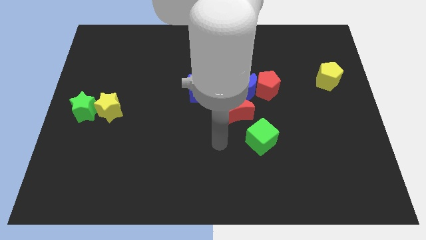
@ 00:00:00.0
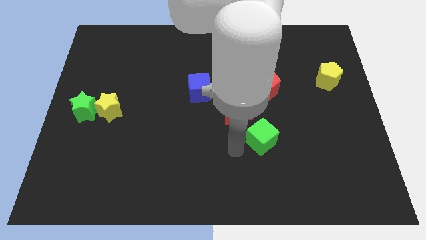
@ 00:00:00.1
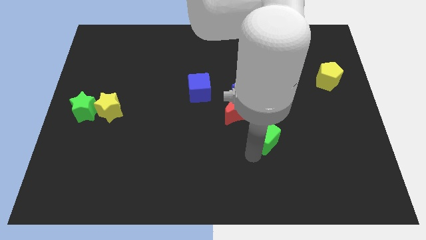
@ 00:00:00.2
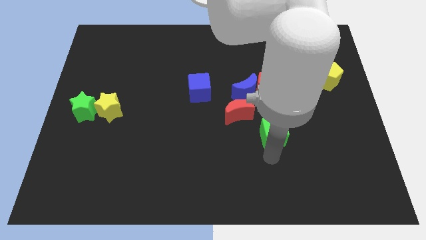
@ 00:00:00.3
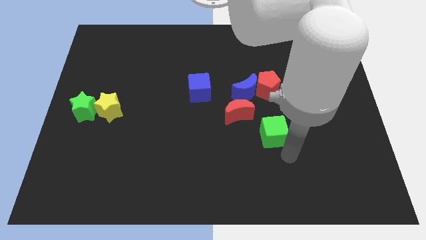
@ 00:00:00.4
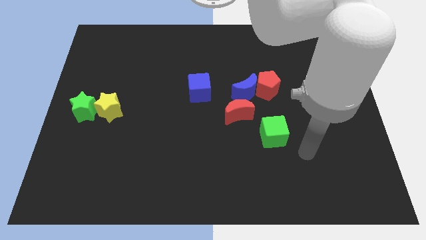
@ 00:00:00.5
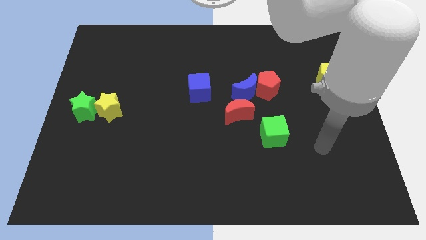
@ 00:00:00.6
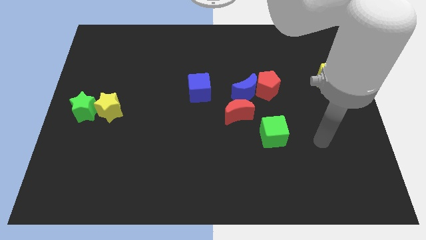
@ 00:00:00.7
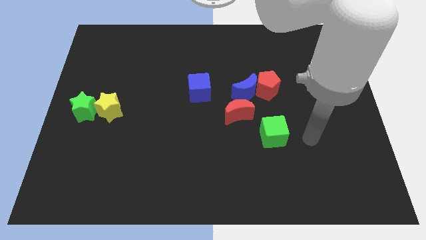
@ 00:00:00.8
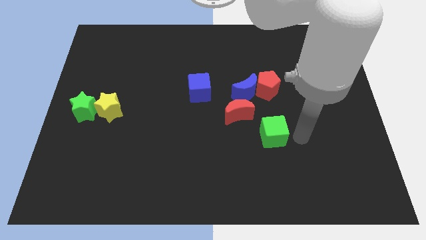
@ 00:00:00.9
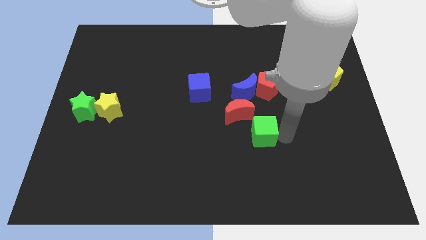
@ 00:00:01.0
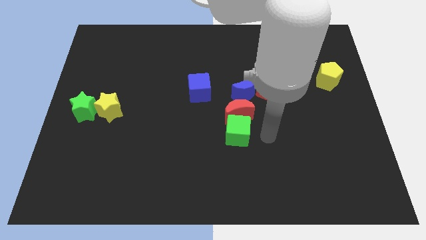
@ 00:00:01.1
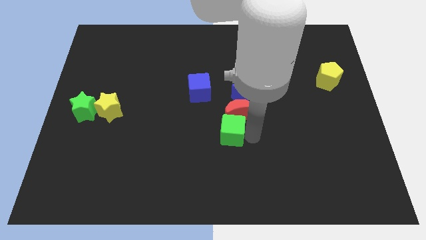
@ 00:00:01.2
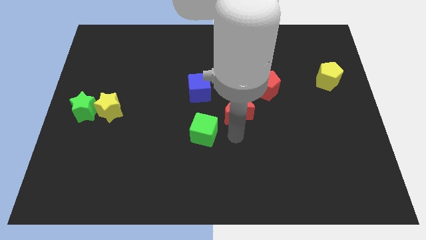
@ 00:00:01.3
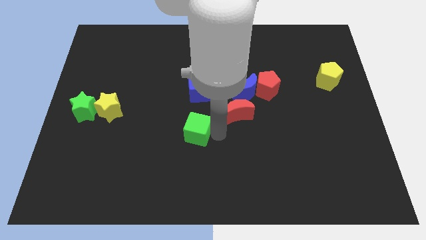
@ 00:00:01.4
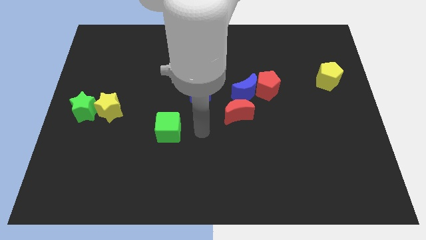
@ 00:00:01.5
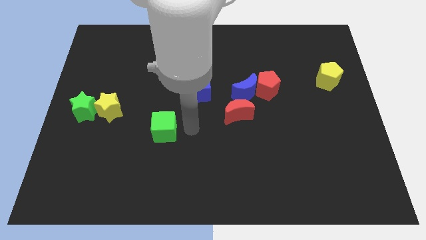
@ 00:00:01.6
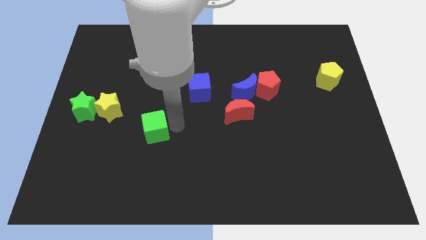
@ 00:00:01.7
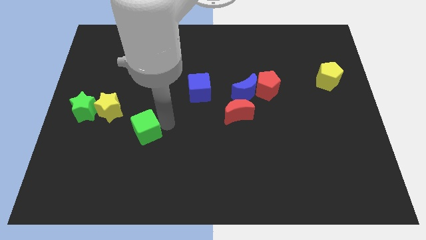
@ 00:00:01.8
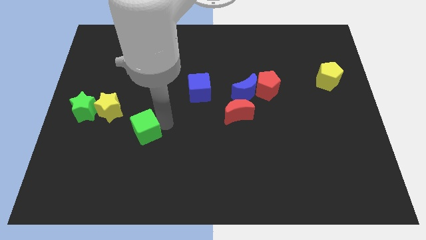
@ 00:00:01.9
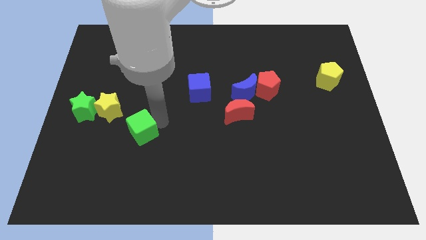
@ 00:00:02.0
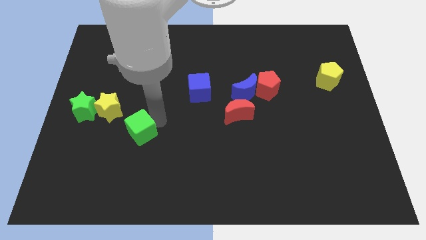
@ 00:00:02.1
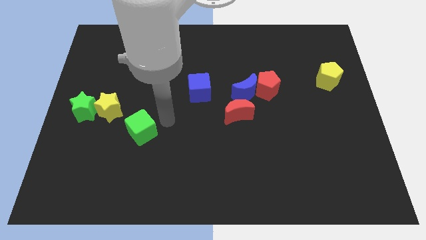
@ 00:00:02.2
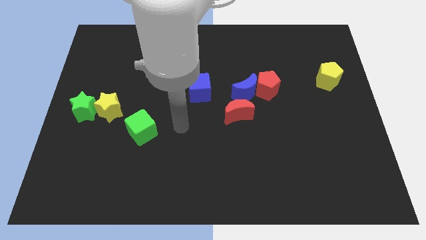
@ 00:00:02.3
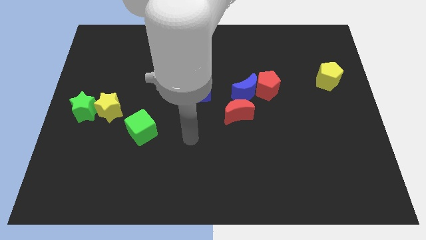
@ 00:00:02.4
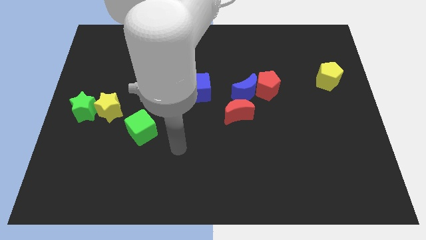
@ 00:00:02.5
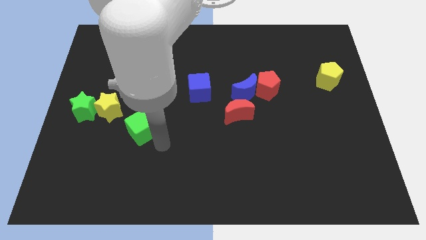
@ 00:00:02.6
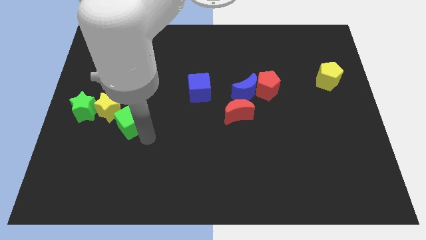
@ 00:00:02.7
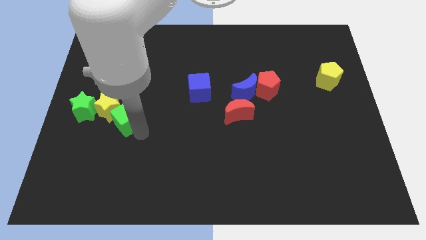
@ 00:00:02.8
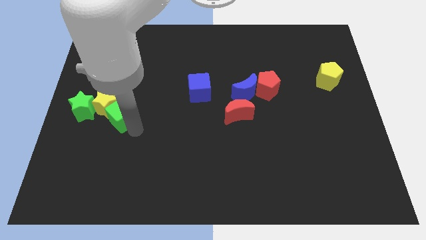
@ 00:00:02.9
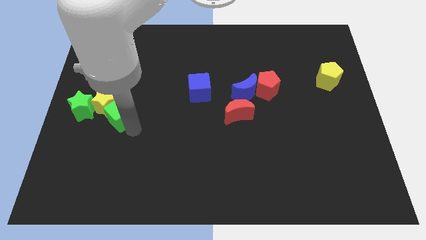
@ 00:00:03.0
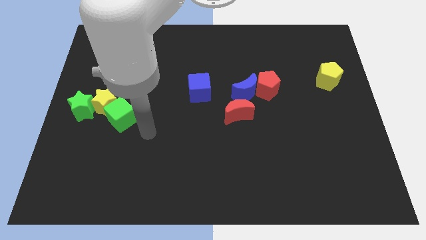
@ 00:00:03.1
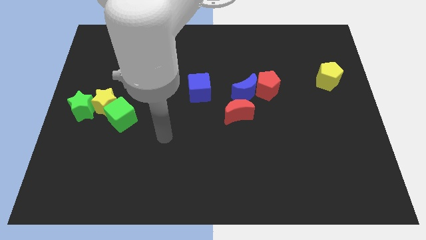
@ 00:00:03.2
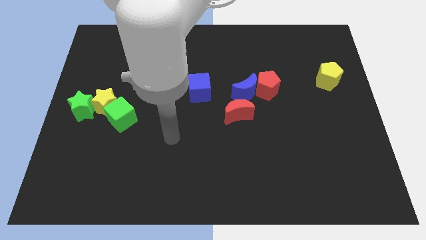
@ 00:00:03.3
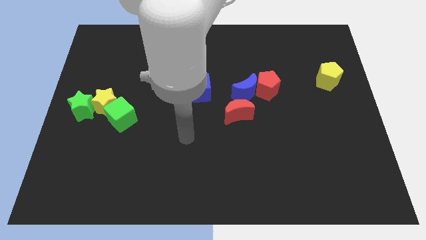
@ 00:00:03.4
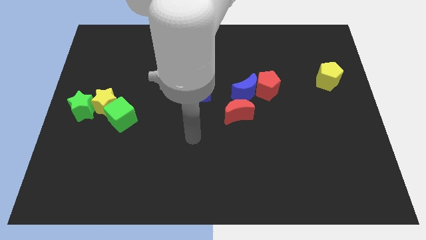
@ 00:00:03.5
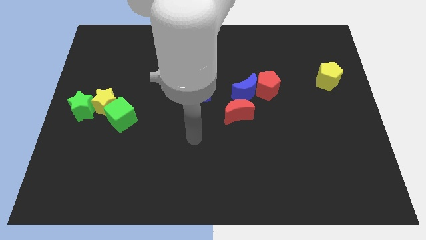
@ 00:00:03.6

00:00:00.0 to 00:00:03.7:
push the green cube close to the yellow star

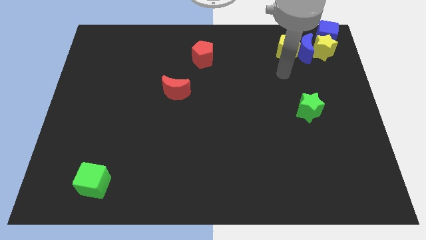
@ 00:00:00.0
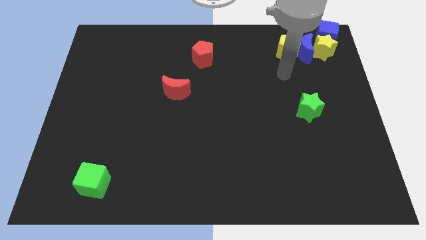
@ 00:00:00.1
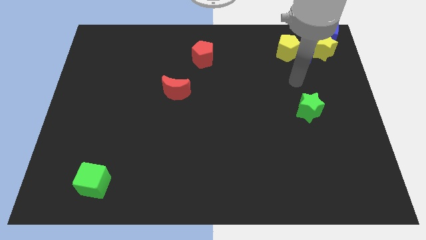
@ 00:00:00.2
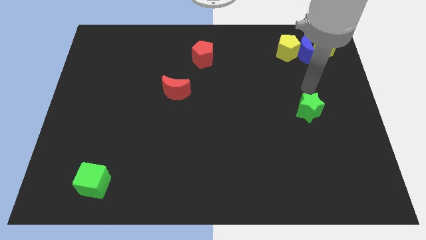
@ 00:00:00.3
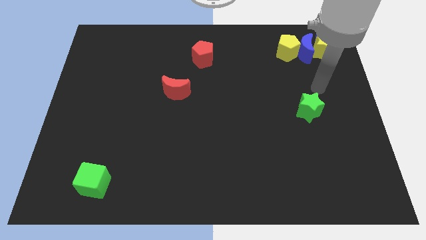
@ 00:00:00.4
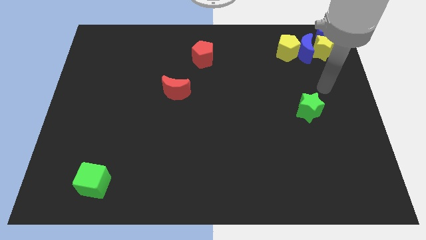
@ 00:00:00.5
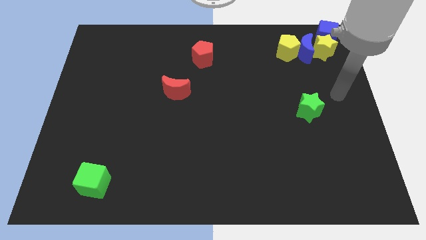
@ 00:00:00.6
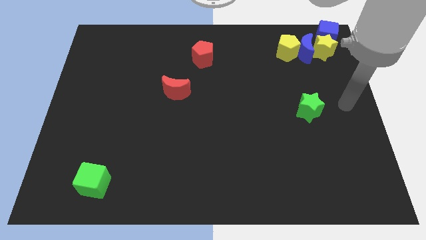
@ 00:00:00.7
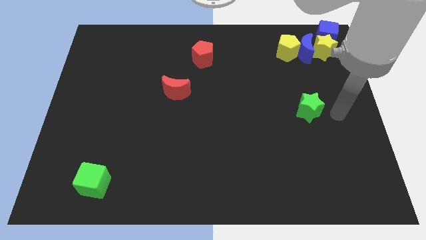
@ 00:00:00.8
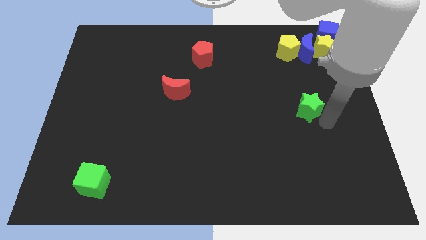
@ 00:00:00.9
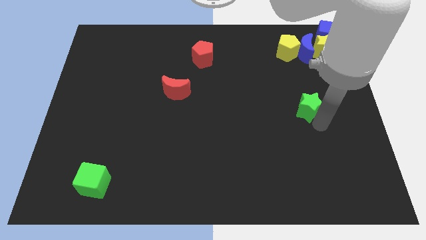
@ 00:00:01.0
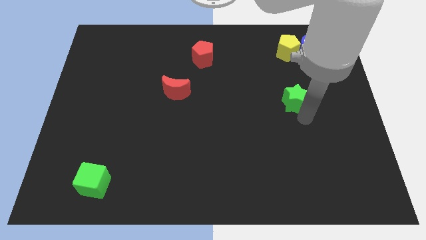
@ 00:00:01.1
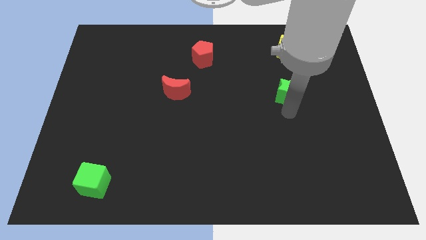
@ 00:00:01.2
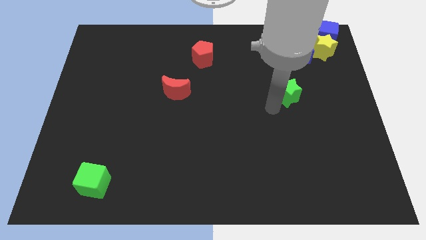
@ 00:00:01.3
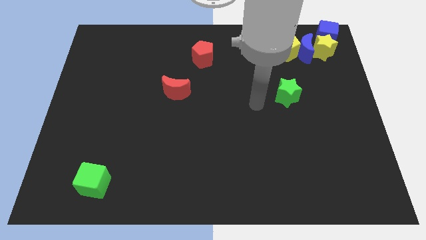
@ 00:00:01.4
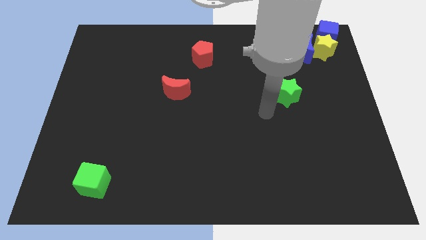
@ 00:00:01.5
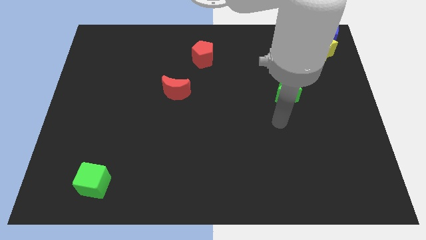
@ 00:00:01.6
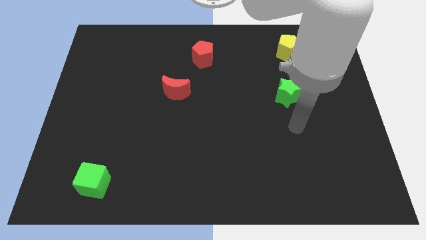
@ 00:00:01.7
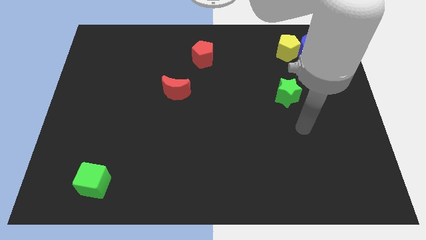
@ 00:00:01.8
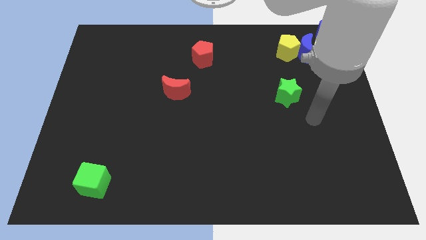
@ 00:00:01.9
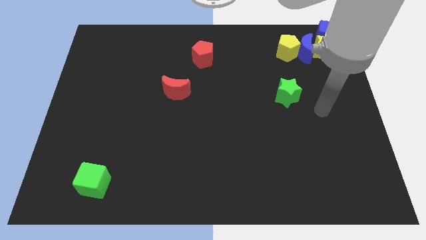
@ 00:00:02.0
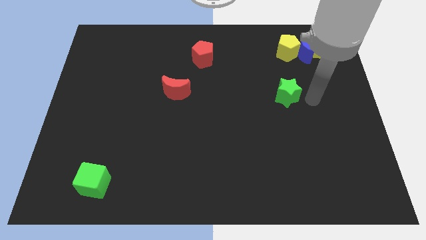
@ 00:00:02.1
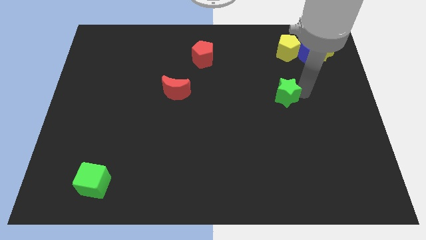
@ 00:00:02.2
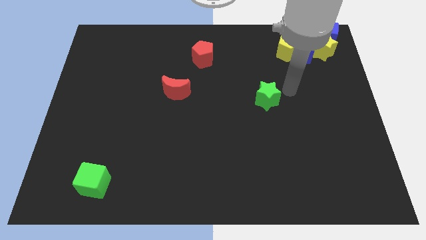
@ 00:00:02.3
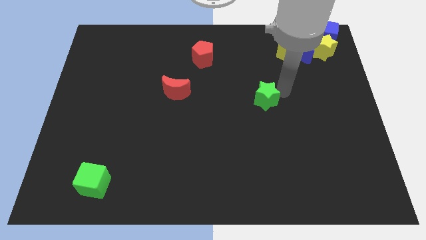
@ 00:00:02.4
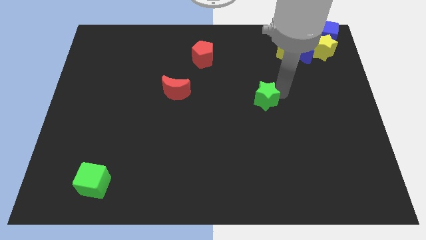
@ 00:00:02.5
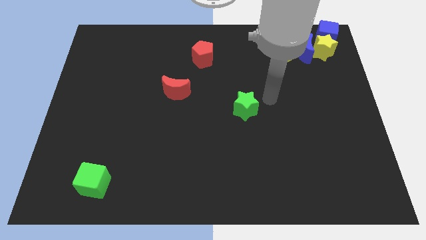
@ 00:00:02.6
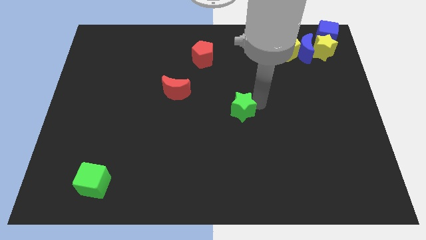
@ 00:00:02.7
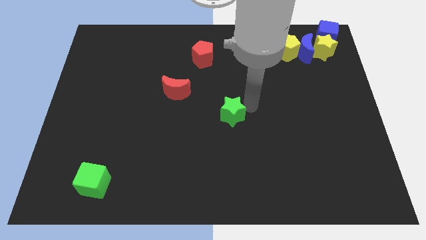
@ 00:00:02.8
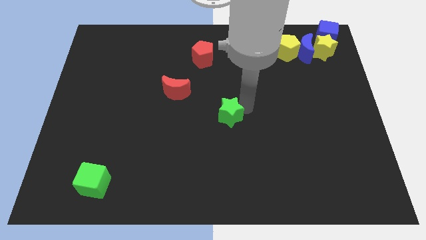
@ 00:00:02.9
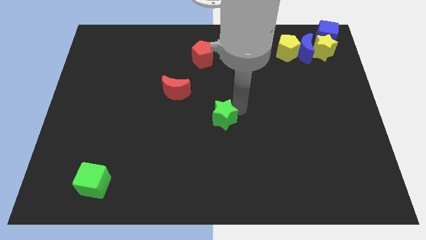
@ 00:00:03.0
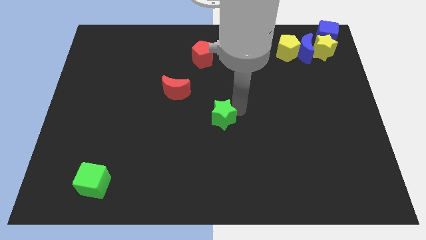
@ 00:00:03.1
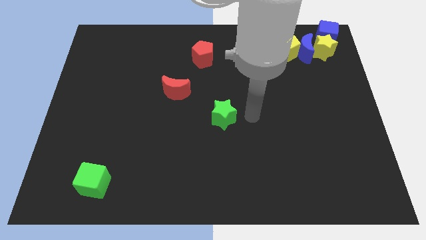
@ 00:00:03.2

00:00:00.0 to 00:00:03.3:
move the green star to the center of the board

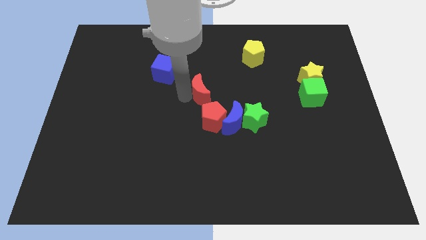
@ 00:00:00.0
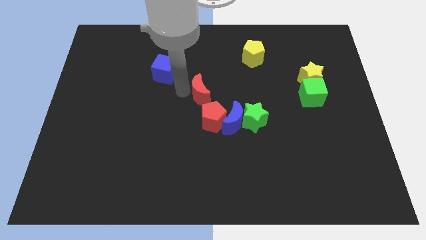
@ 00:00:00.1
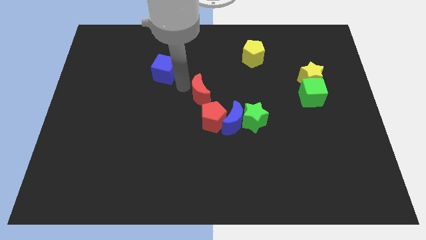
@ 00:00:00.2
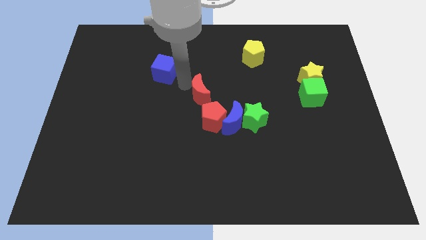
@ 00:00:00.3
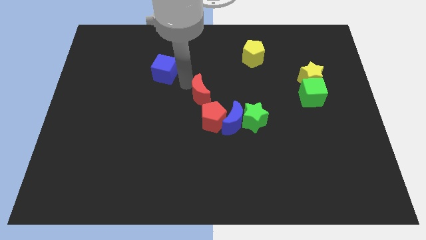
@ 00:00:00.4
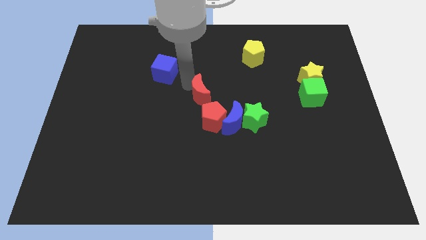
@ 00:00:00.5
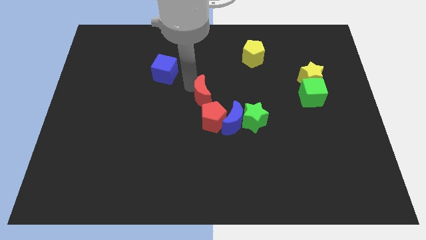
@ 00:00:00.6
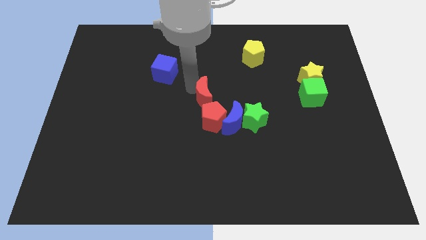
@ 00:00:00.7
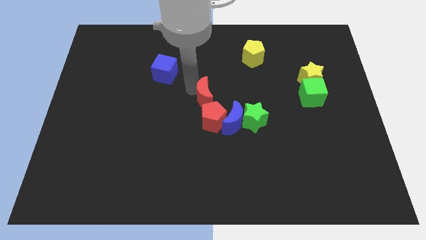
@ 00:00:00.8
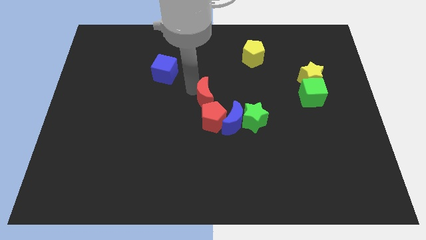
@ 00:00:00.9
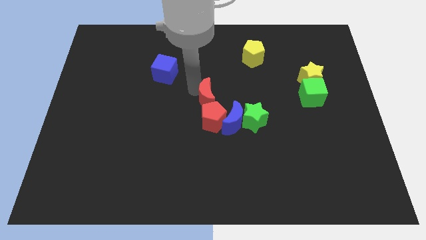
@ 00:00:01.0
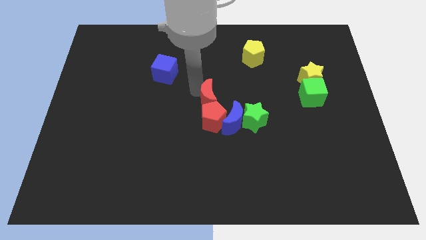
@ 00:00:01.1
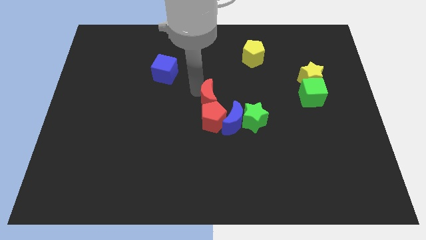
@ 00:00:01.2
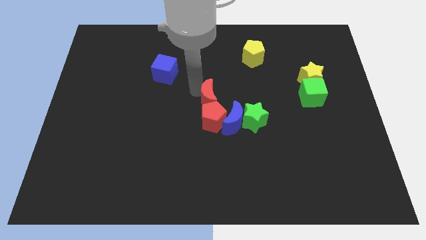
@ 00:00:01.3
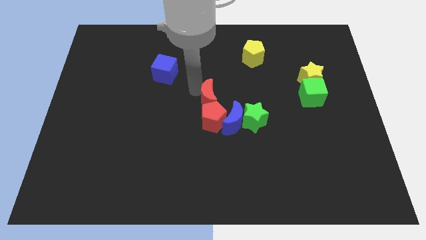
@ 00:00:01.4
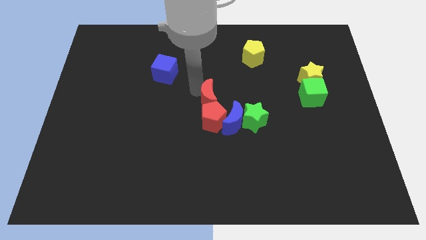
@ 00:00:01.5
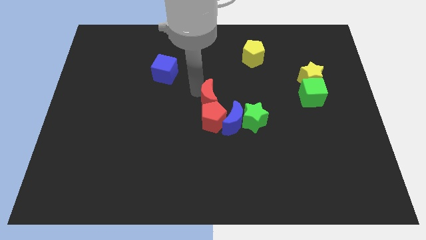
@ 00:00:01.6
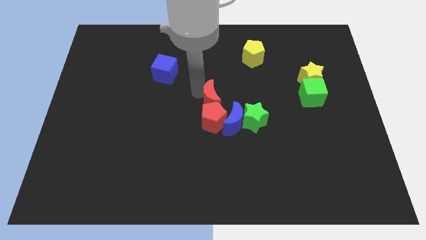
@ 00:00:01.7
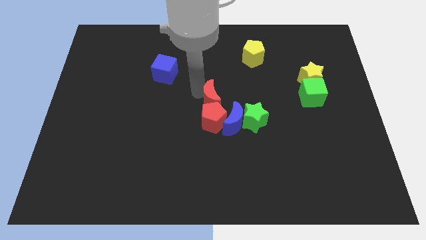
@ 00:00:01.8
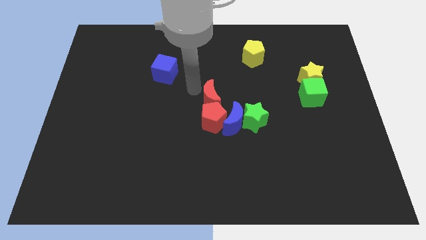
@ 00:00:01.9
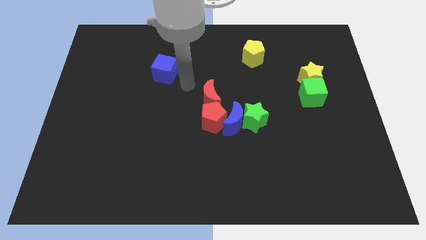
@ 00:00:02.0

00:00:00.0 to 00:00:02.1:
move the red moon to the top of the red pentagon
